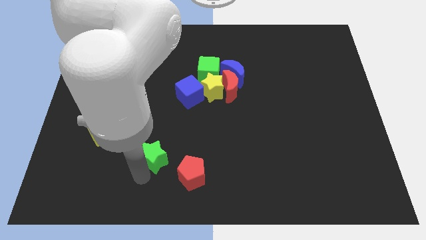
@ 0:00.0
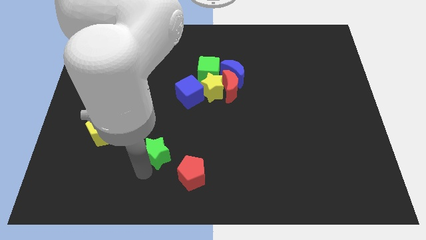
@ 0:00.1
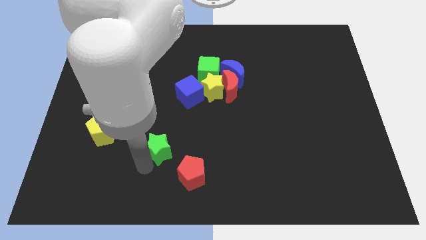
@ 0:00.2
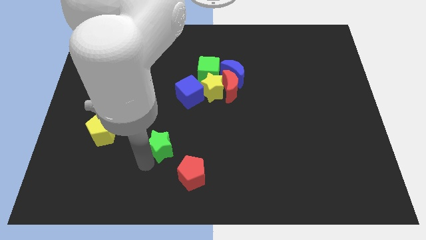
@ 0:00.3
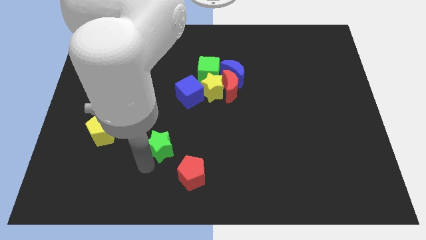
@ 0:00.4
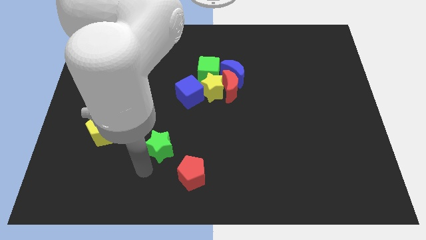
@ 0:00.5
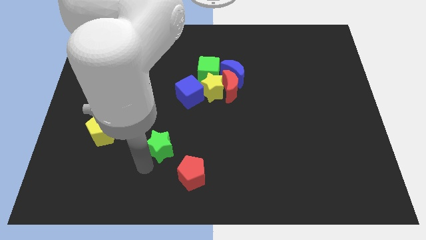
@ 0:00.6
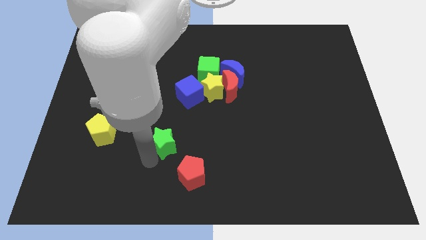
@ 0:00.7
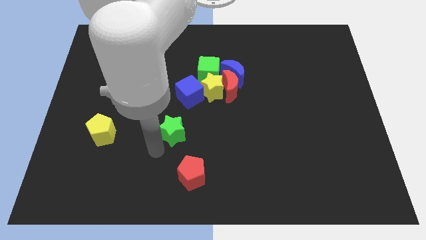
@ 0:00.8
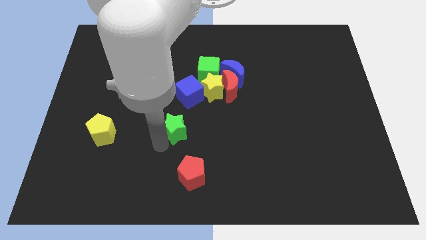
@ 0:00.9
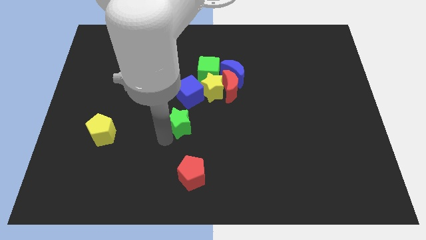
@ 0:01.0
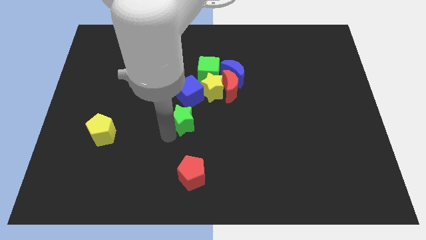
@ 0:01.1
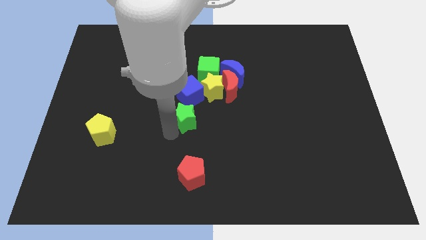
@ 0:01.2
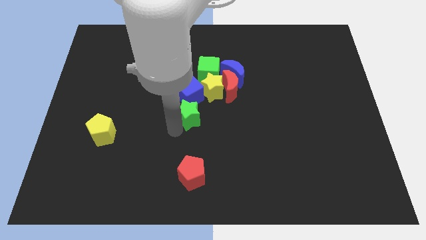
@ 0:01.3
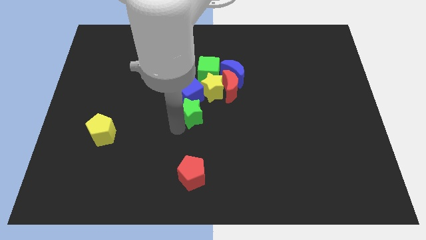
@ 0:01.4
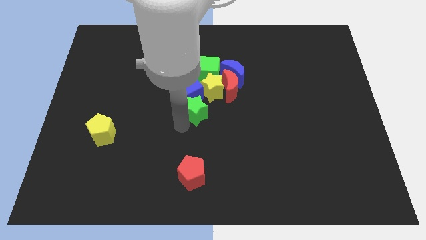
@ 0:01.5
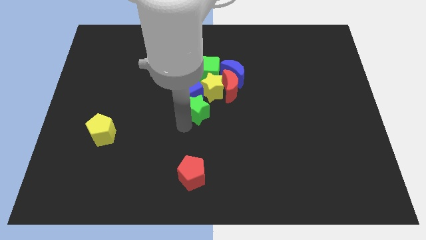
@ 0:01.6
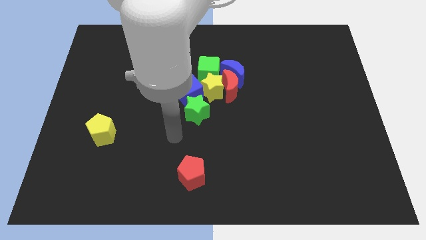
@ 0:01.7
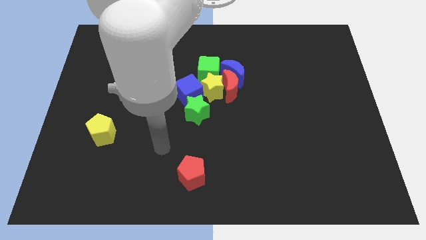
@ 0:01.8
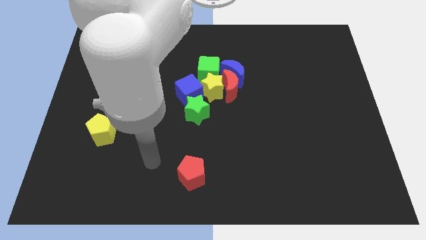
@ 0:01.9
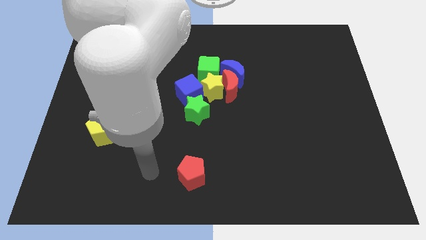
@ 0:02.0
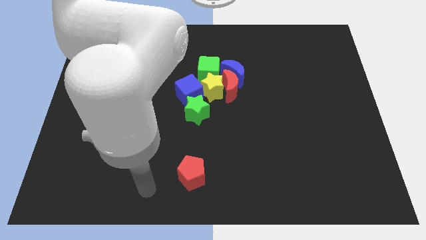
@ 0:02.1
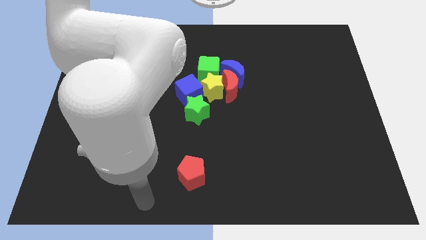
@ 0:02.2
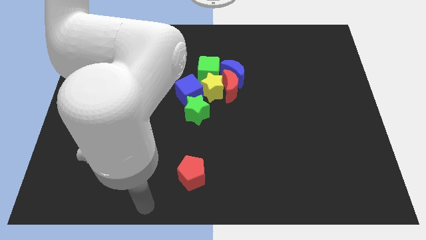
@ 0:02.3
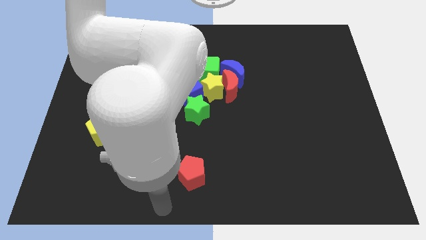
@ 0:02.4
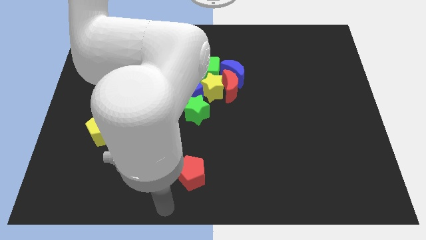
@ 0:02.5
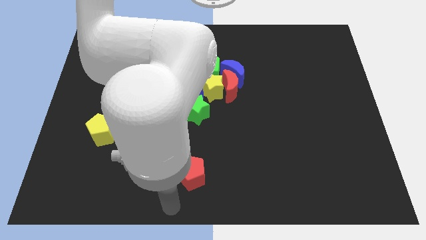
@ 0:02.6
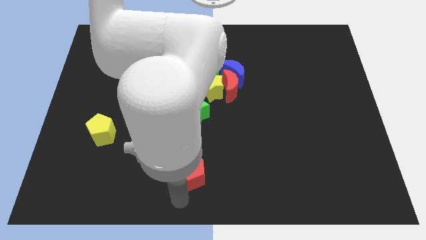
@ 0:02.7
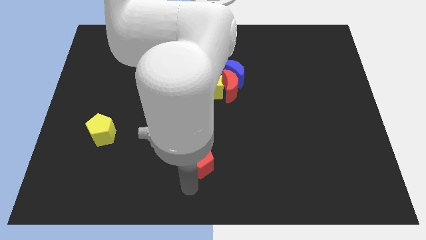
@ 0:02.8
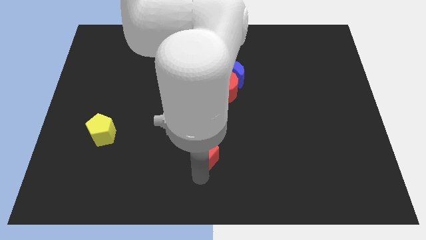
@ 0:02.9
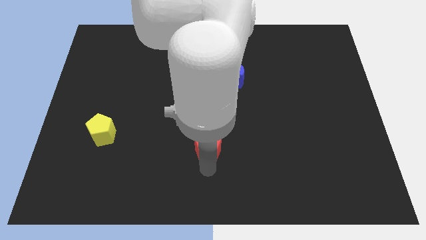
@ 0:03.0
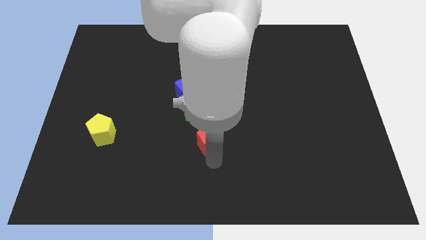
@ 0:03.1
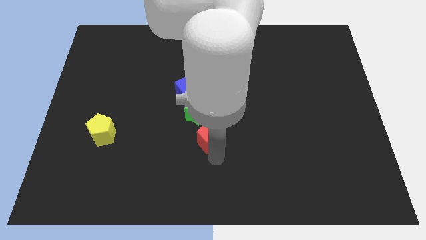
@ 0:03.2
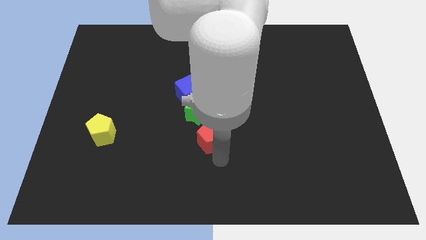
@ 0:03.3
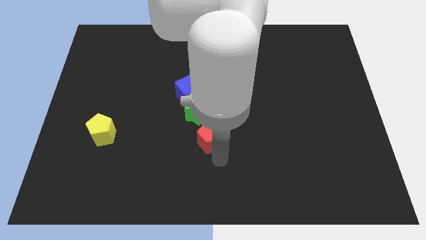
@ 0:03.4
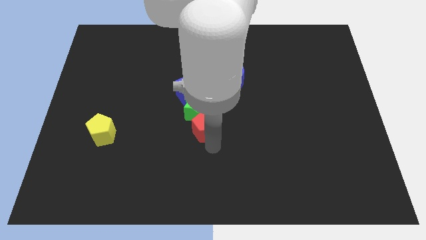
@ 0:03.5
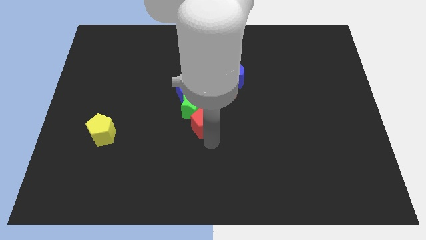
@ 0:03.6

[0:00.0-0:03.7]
push green star and red pentagon in to group of blocks

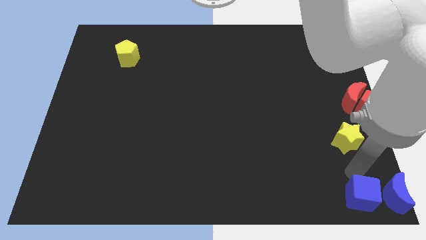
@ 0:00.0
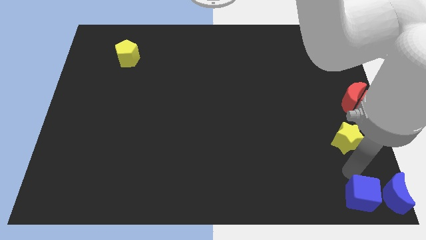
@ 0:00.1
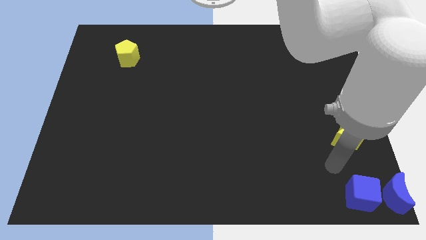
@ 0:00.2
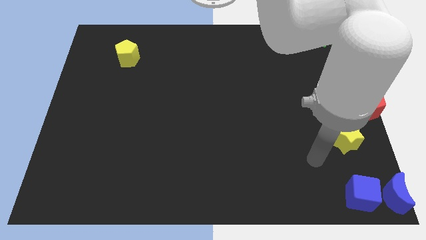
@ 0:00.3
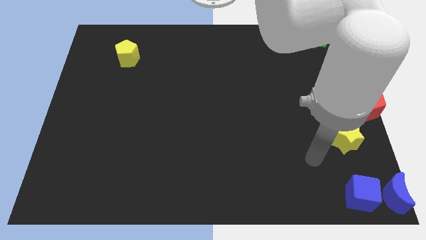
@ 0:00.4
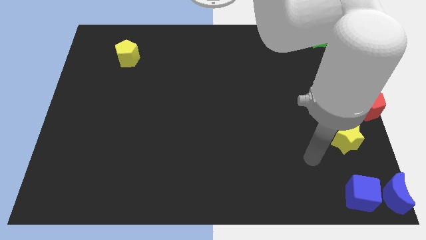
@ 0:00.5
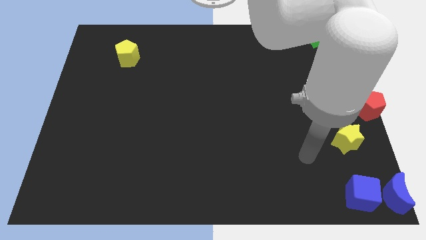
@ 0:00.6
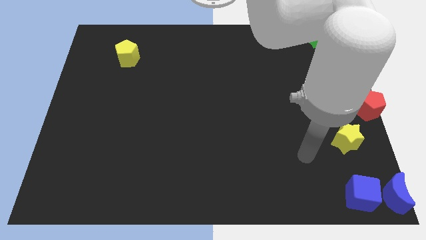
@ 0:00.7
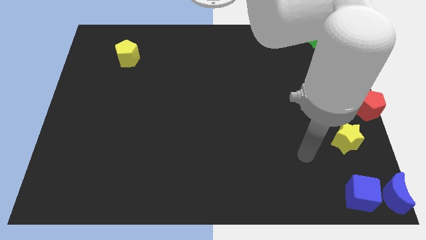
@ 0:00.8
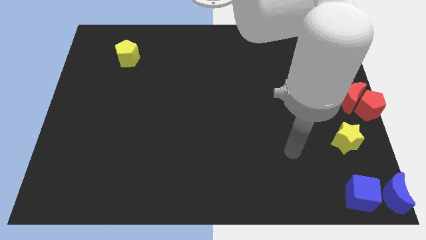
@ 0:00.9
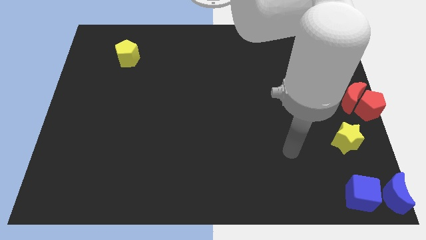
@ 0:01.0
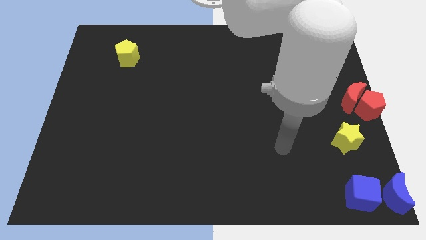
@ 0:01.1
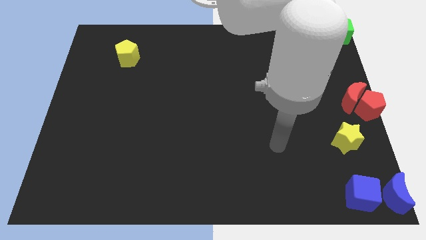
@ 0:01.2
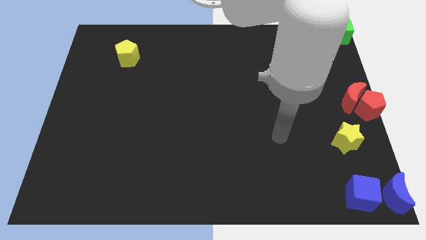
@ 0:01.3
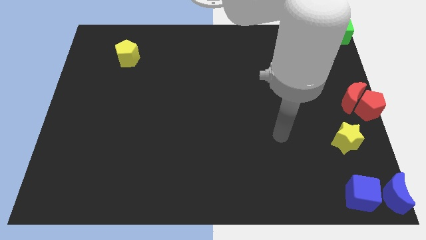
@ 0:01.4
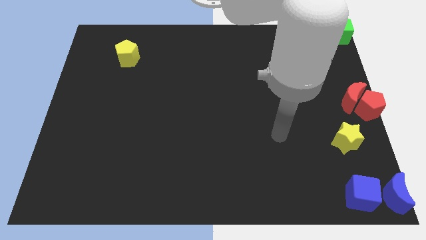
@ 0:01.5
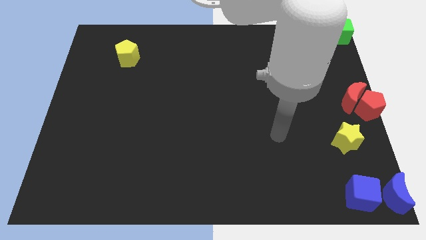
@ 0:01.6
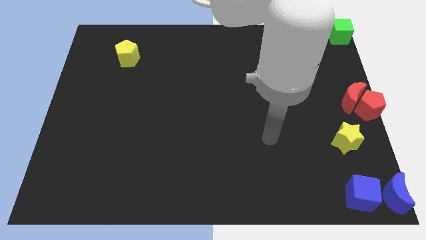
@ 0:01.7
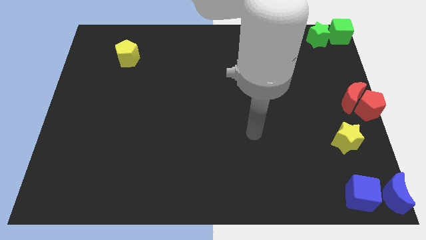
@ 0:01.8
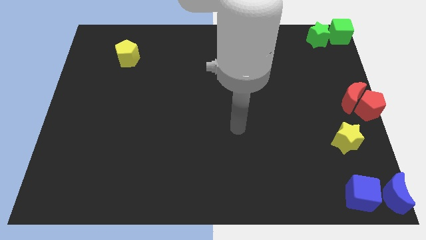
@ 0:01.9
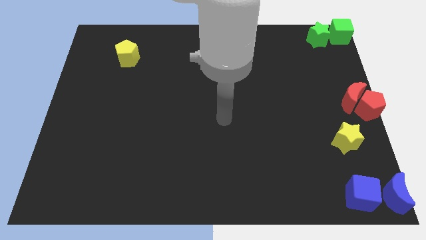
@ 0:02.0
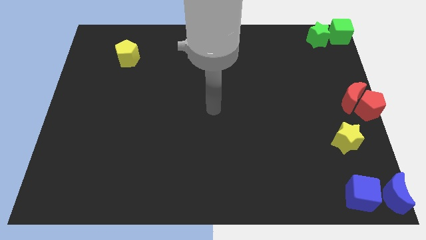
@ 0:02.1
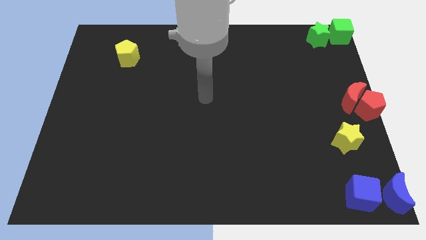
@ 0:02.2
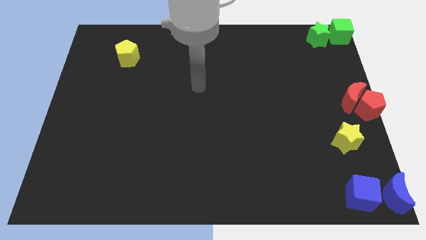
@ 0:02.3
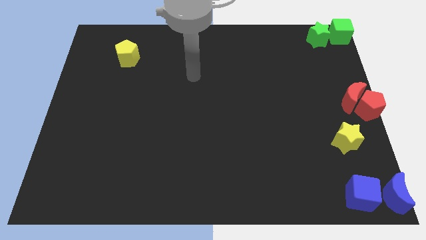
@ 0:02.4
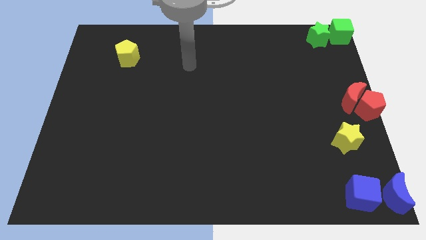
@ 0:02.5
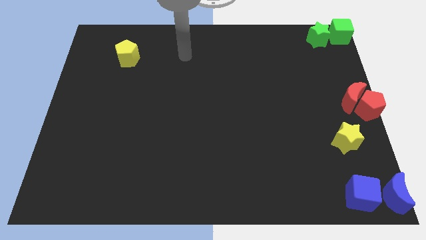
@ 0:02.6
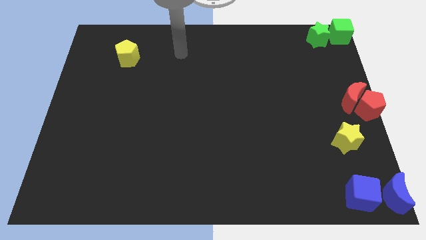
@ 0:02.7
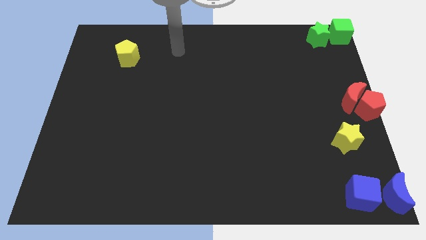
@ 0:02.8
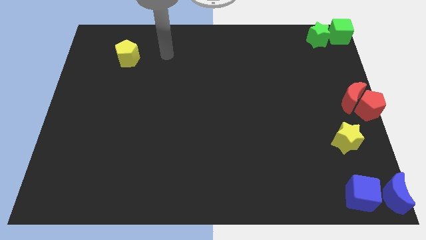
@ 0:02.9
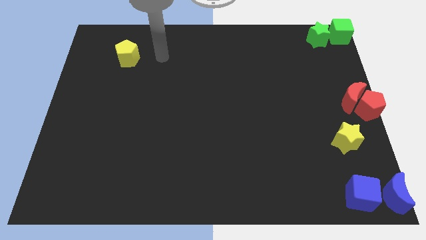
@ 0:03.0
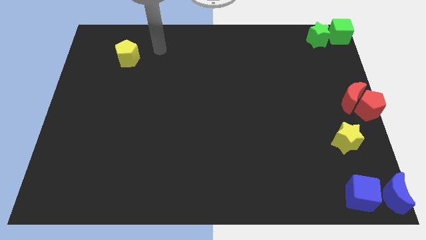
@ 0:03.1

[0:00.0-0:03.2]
move your hand towards the yellow pentagon

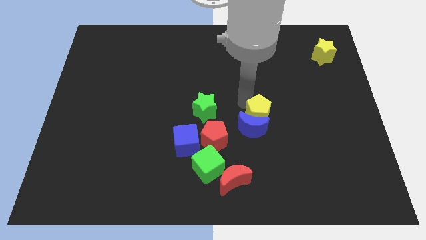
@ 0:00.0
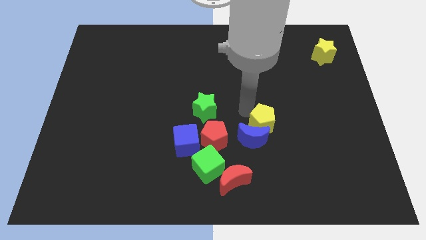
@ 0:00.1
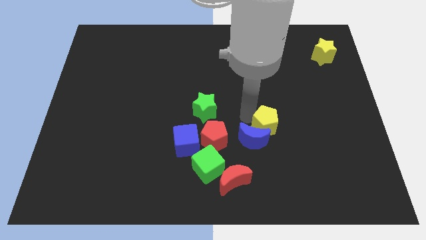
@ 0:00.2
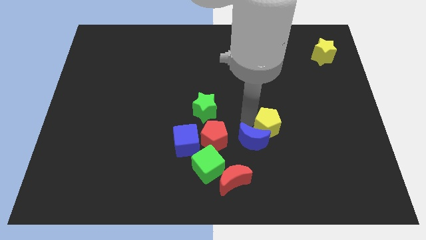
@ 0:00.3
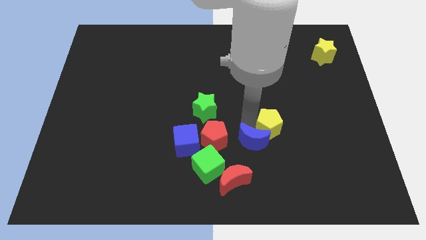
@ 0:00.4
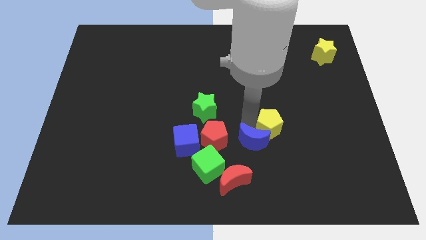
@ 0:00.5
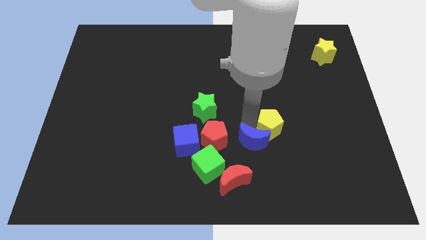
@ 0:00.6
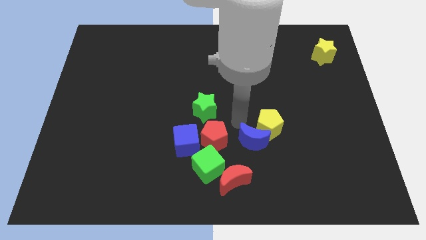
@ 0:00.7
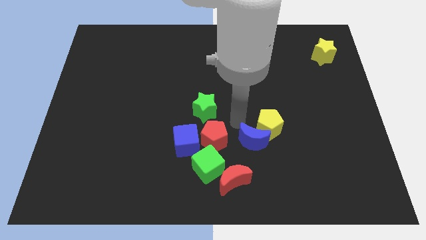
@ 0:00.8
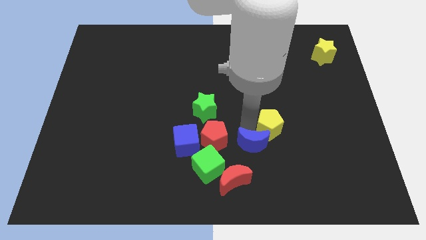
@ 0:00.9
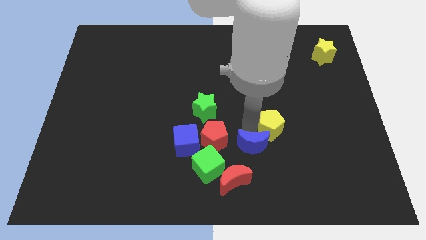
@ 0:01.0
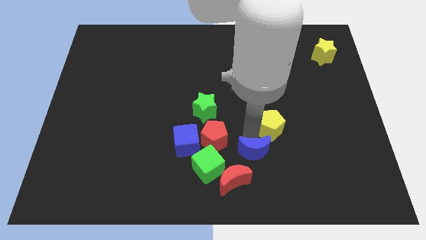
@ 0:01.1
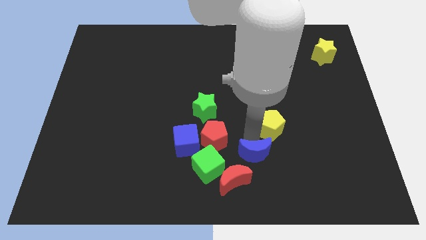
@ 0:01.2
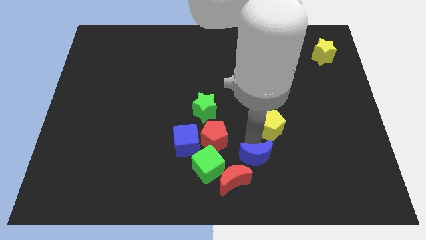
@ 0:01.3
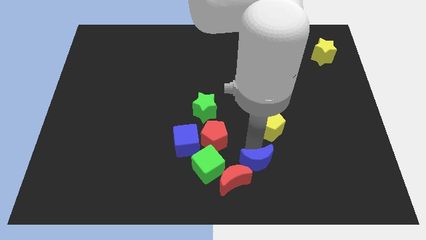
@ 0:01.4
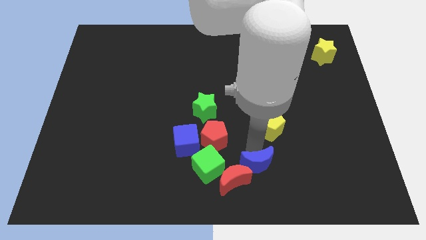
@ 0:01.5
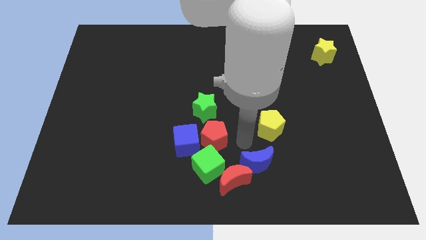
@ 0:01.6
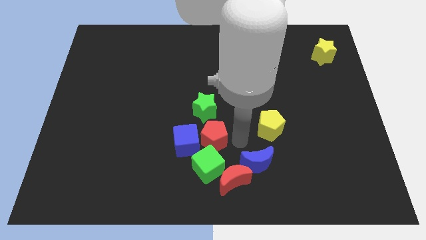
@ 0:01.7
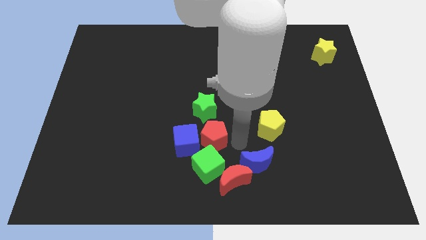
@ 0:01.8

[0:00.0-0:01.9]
separate the blue moon and yellow pentagon
